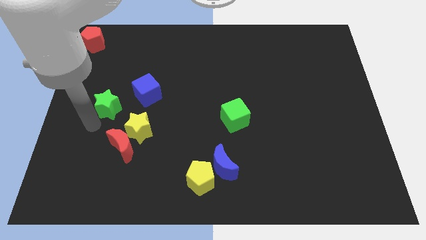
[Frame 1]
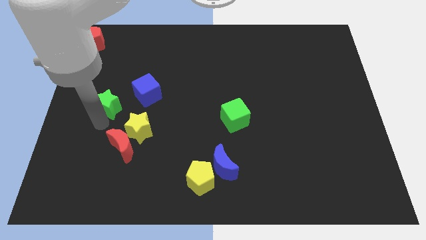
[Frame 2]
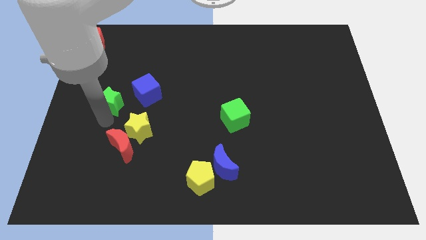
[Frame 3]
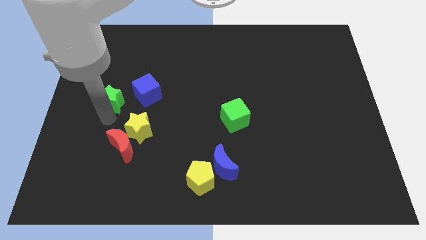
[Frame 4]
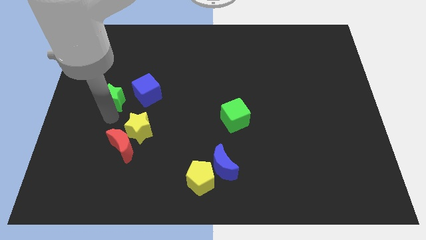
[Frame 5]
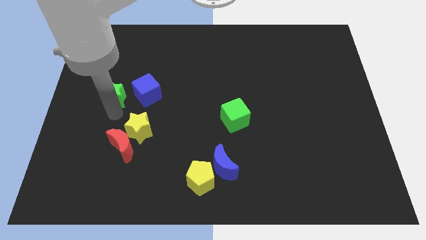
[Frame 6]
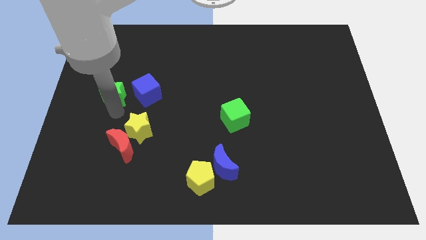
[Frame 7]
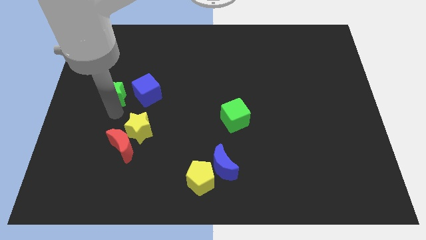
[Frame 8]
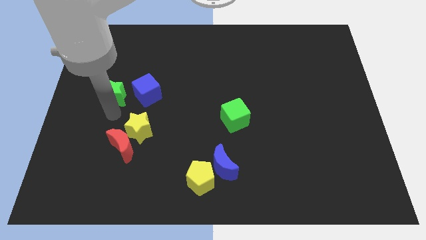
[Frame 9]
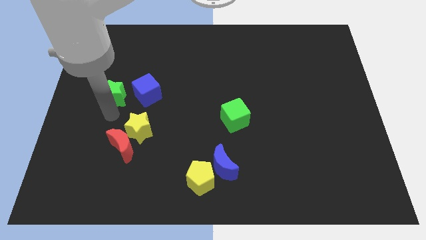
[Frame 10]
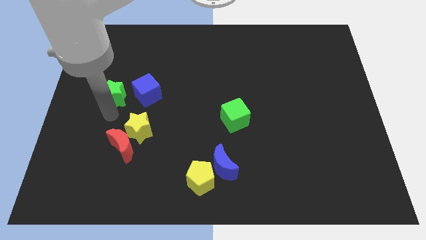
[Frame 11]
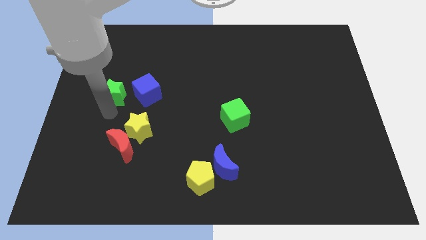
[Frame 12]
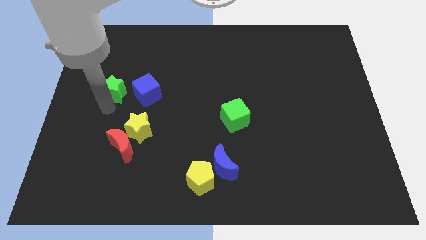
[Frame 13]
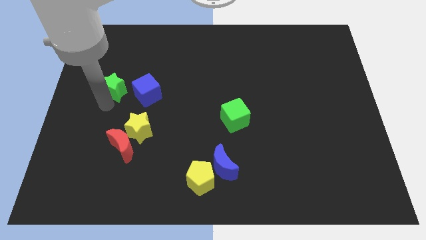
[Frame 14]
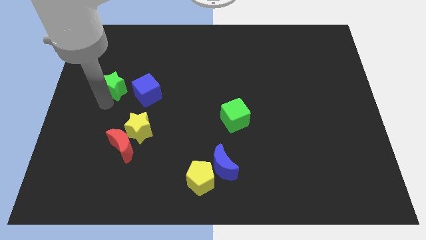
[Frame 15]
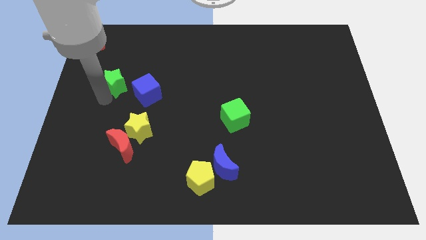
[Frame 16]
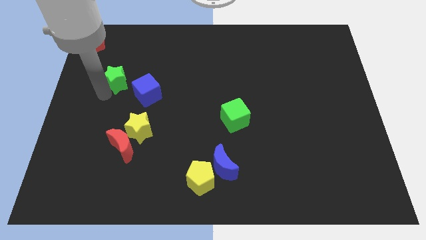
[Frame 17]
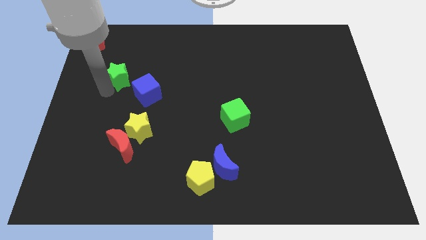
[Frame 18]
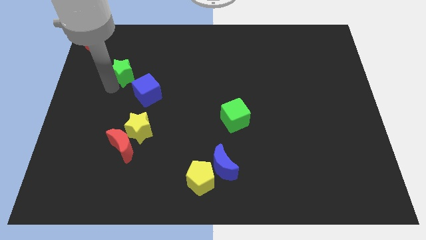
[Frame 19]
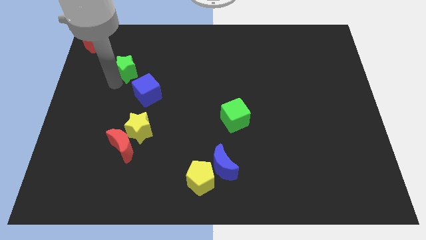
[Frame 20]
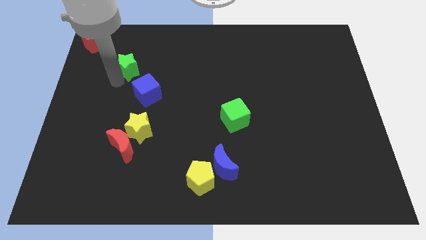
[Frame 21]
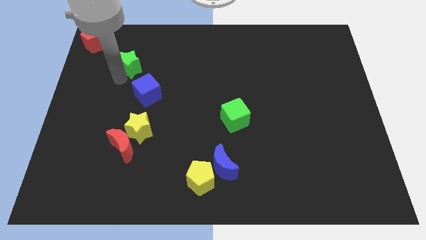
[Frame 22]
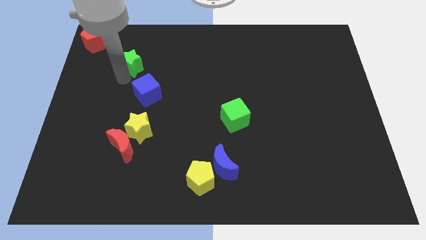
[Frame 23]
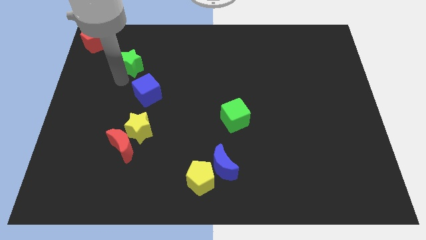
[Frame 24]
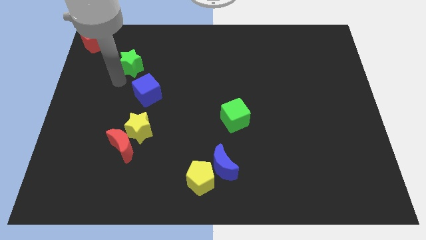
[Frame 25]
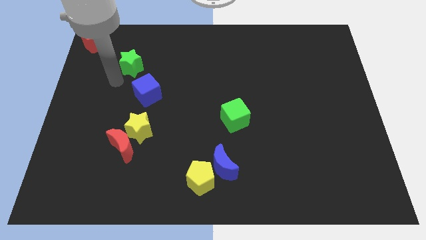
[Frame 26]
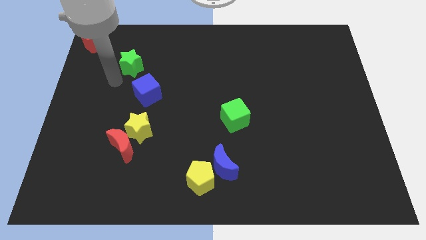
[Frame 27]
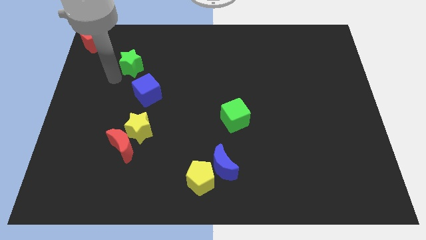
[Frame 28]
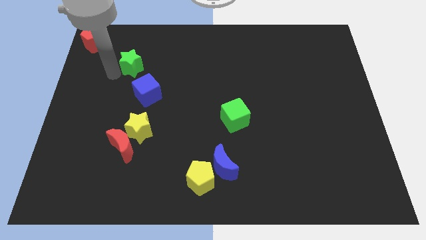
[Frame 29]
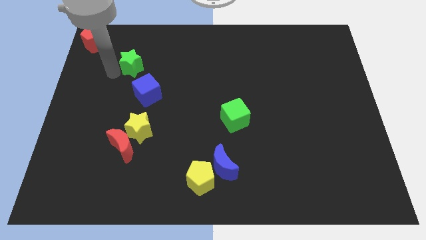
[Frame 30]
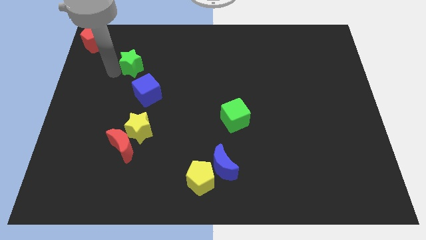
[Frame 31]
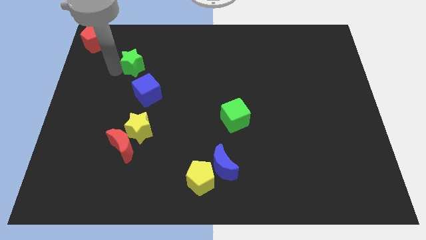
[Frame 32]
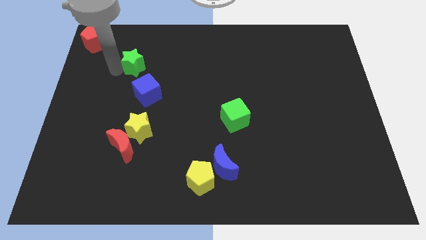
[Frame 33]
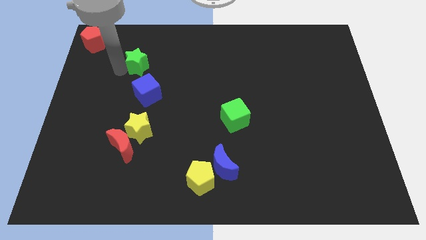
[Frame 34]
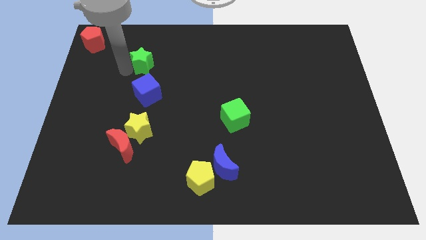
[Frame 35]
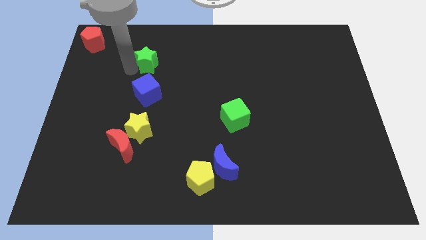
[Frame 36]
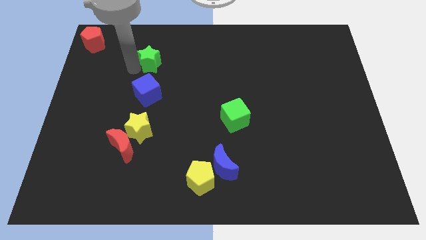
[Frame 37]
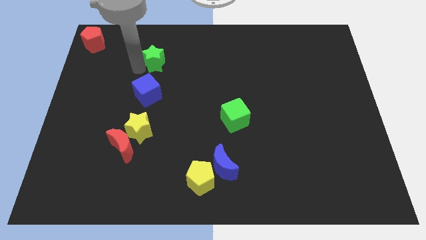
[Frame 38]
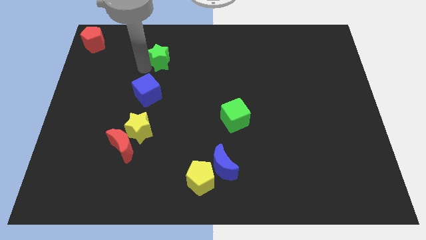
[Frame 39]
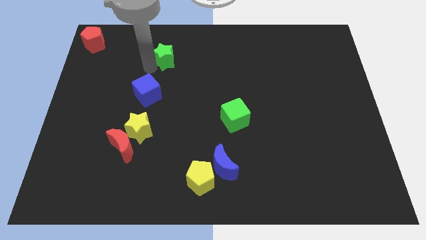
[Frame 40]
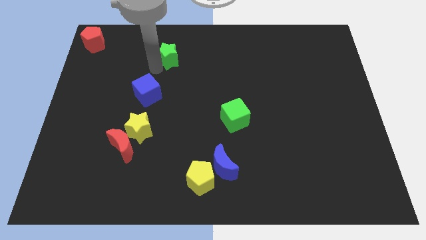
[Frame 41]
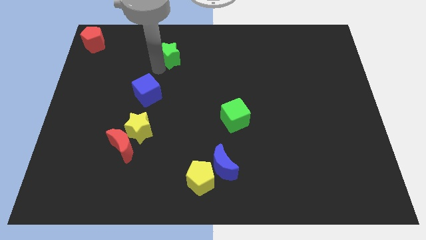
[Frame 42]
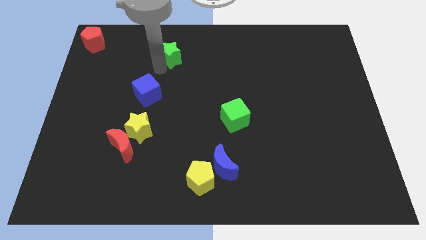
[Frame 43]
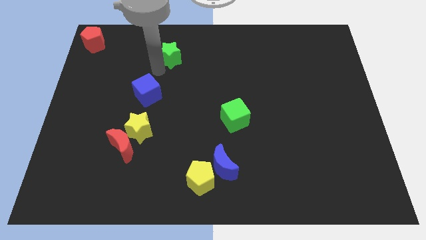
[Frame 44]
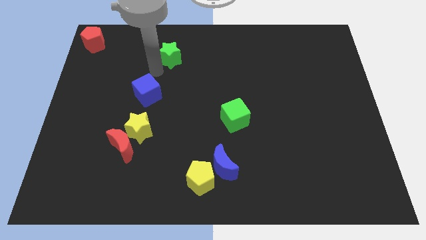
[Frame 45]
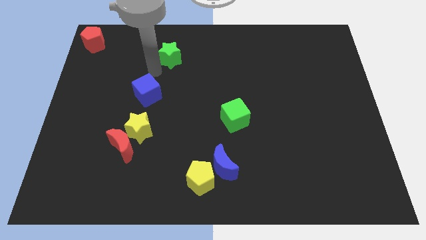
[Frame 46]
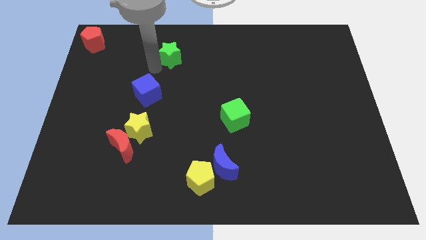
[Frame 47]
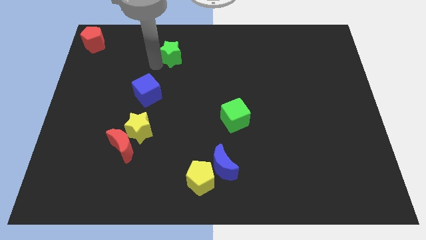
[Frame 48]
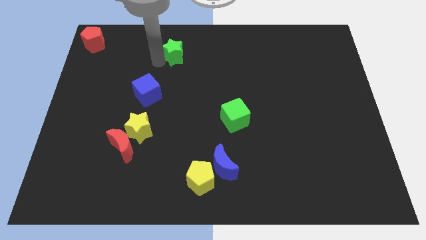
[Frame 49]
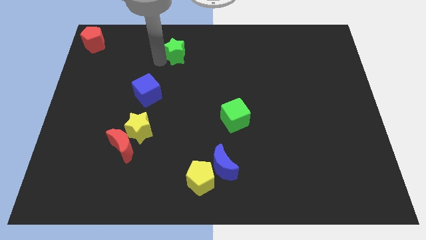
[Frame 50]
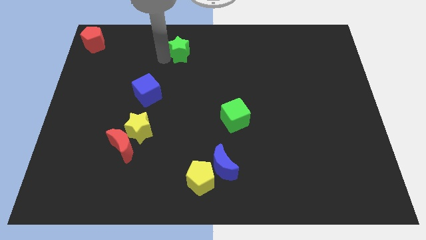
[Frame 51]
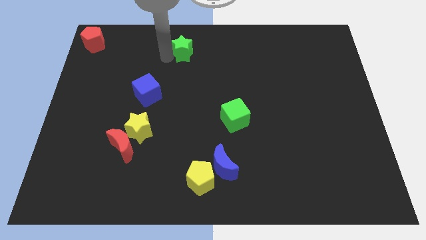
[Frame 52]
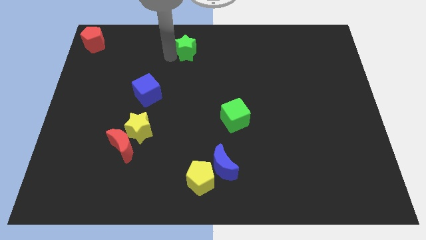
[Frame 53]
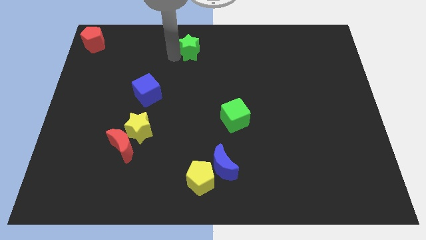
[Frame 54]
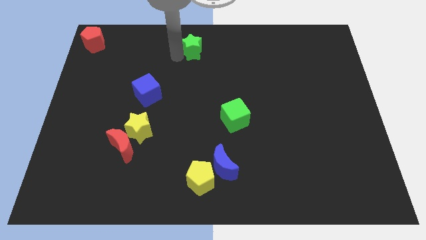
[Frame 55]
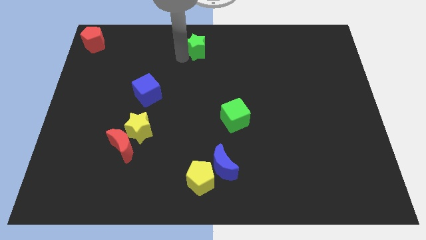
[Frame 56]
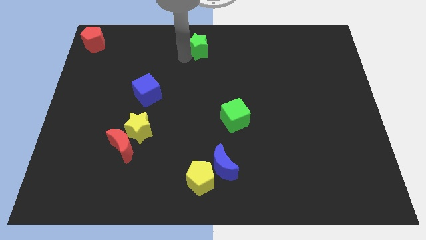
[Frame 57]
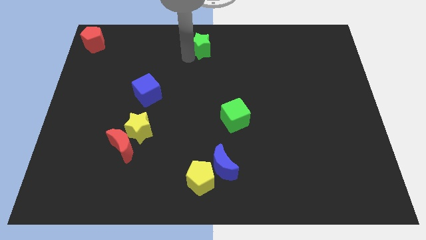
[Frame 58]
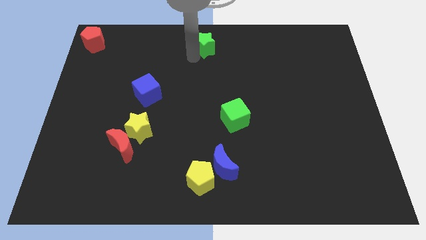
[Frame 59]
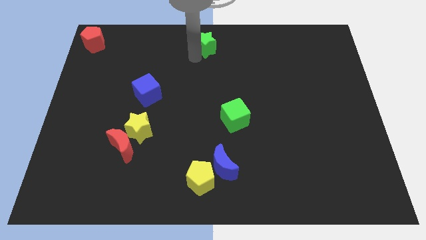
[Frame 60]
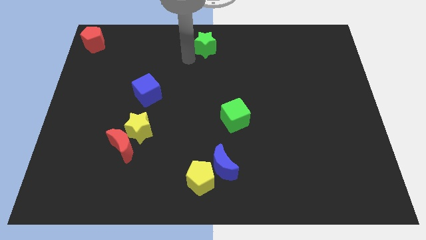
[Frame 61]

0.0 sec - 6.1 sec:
move the green star to the top center of the table

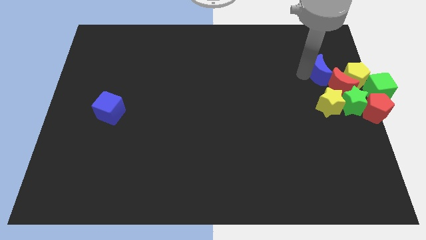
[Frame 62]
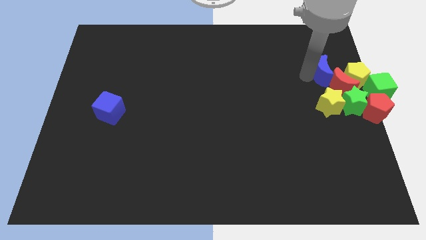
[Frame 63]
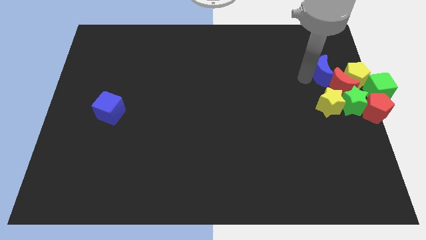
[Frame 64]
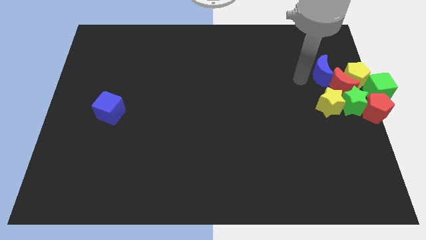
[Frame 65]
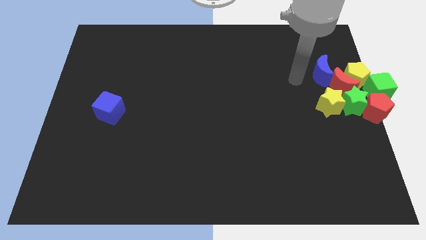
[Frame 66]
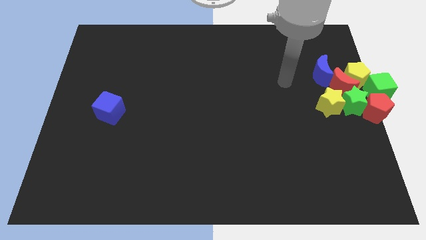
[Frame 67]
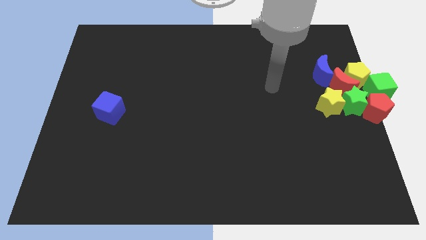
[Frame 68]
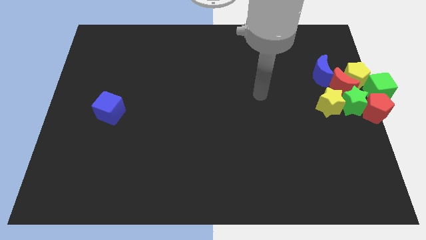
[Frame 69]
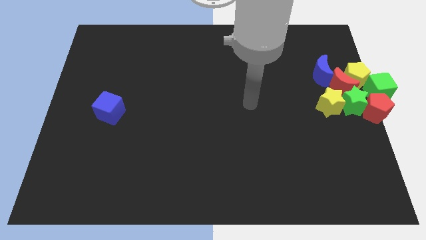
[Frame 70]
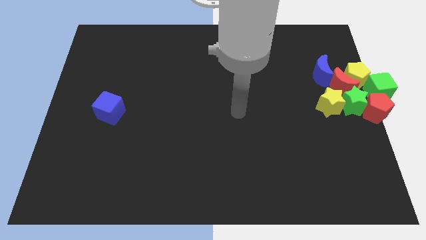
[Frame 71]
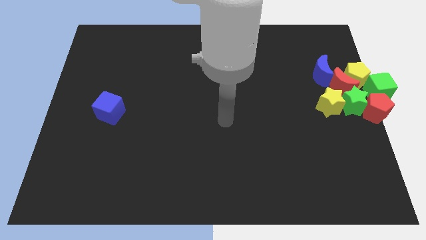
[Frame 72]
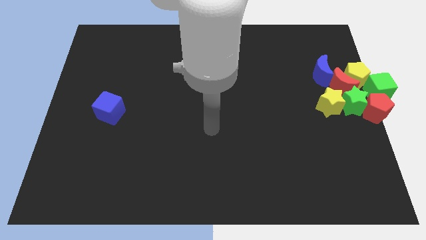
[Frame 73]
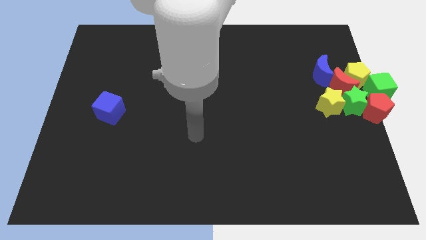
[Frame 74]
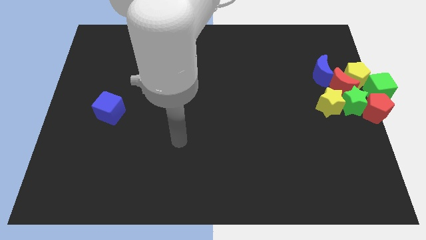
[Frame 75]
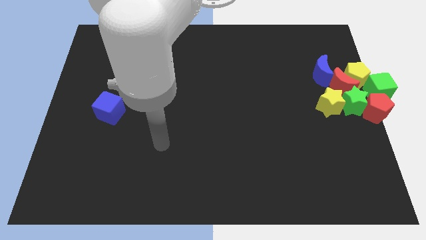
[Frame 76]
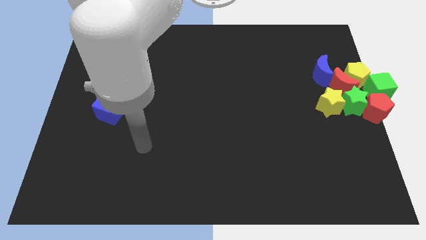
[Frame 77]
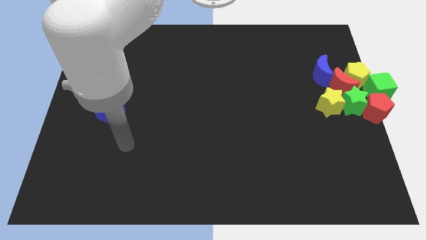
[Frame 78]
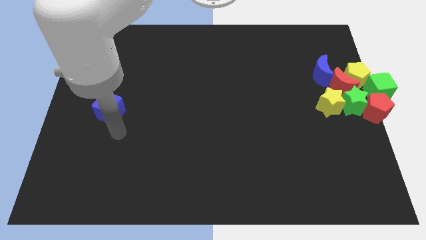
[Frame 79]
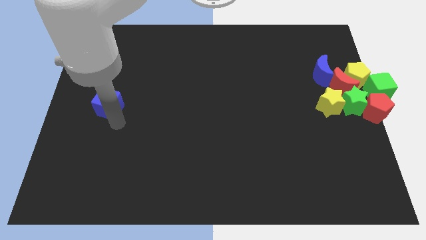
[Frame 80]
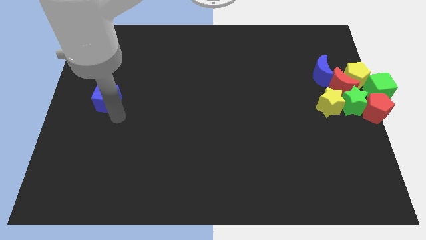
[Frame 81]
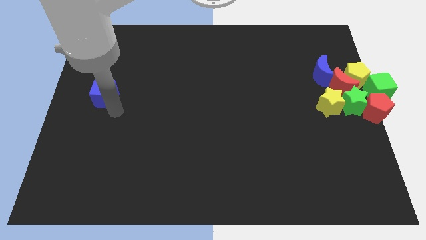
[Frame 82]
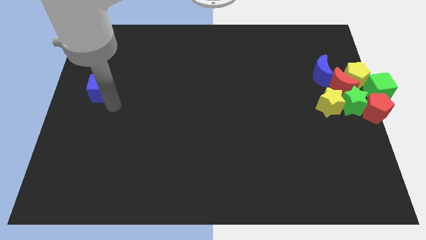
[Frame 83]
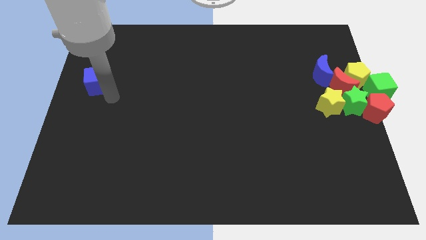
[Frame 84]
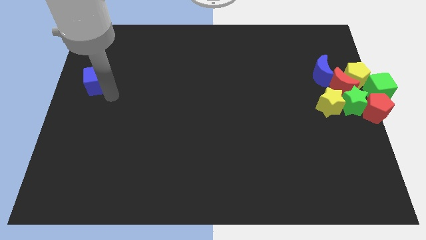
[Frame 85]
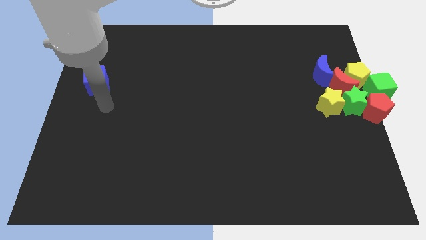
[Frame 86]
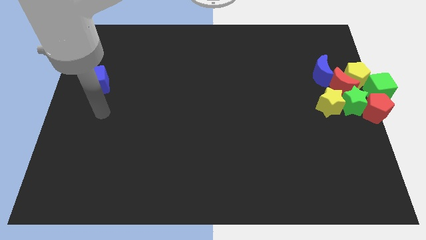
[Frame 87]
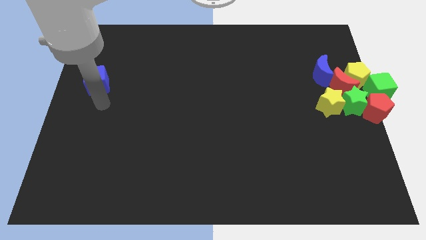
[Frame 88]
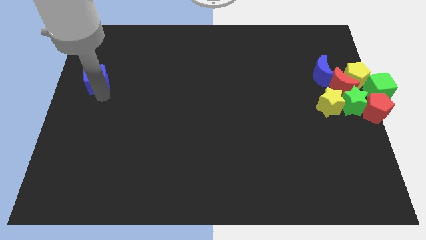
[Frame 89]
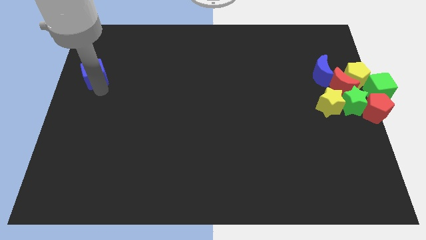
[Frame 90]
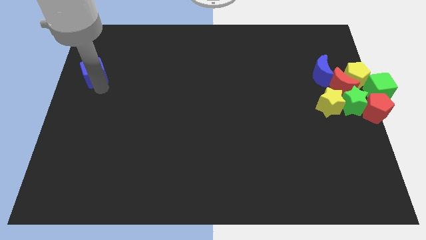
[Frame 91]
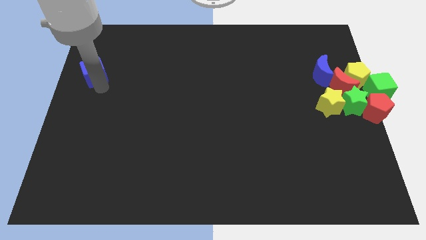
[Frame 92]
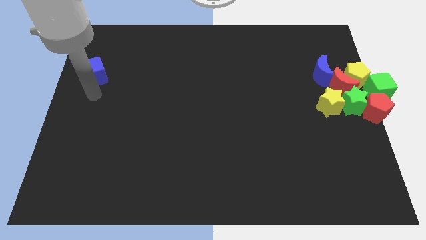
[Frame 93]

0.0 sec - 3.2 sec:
push blue cube towards the top side of board
